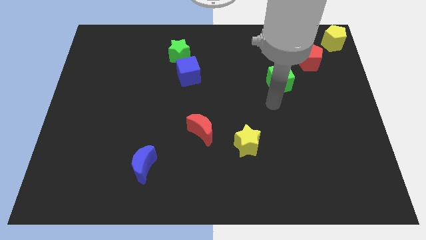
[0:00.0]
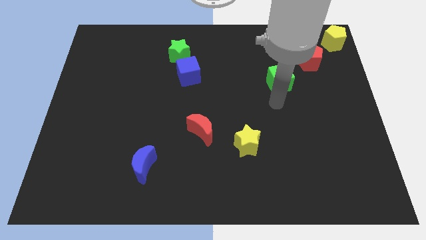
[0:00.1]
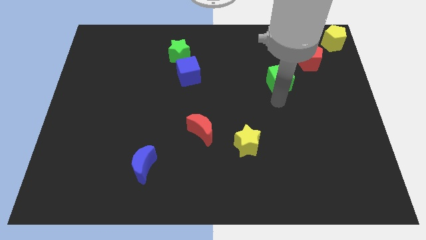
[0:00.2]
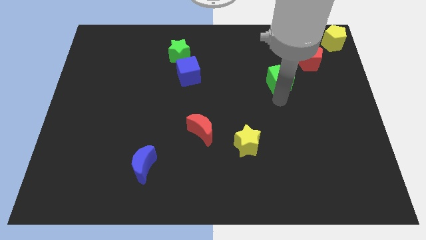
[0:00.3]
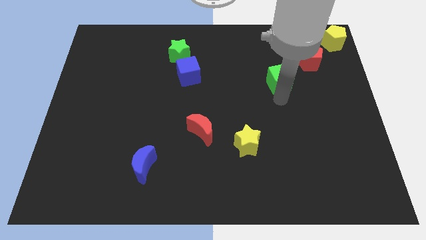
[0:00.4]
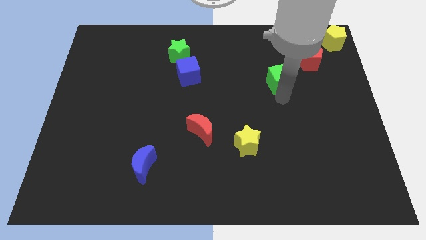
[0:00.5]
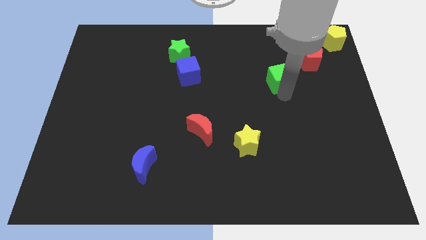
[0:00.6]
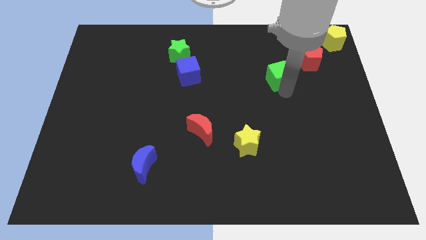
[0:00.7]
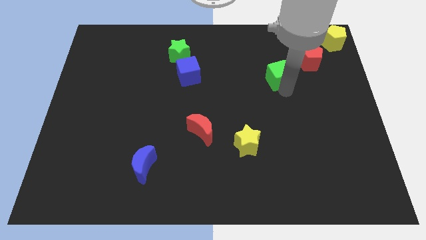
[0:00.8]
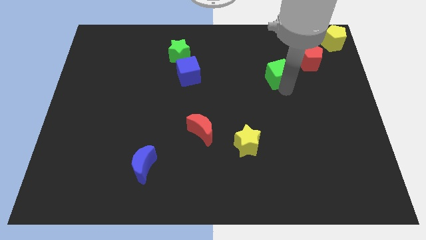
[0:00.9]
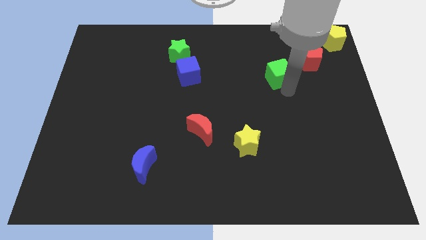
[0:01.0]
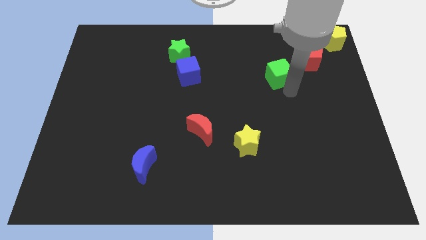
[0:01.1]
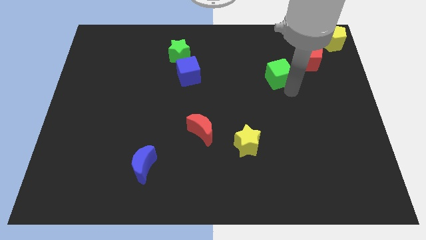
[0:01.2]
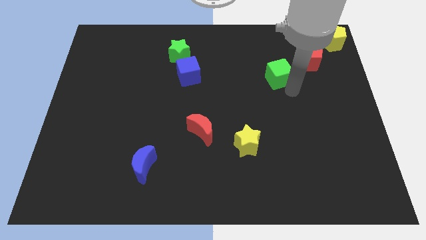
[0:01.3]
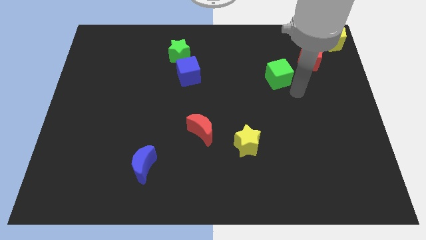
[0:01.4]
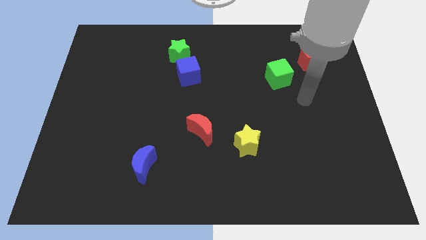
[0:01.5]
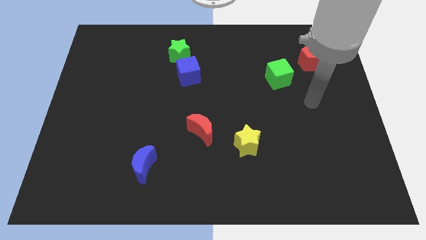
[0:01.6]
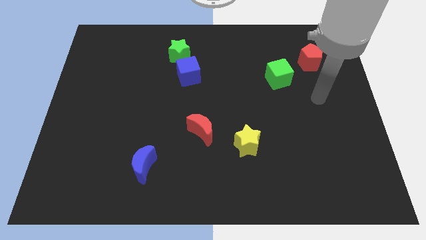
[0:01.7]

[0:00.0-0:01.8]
push the green cube diagonally below the red pentagon

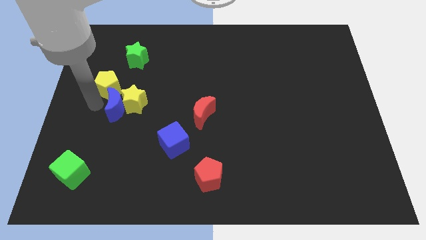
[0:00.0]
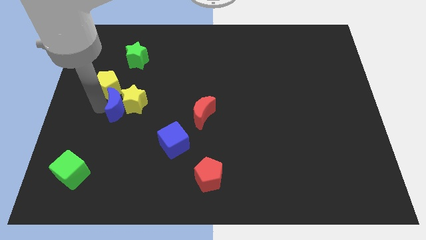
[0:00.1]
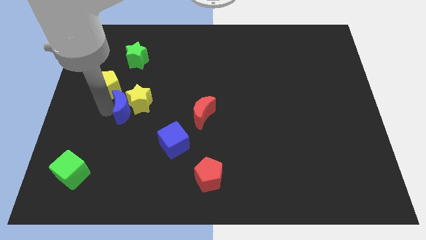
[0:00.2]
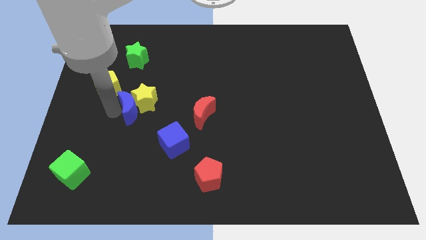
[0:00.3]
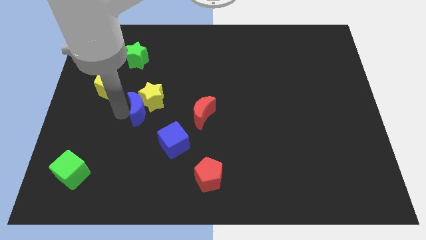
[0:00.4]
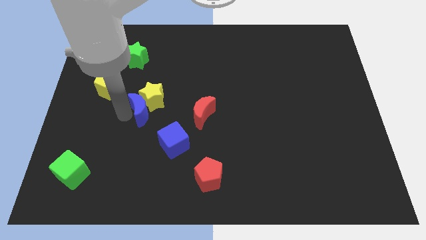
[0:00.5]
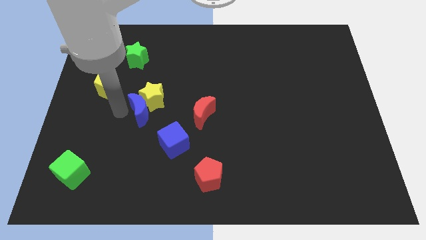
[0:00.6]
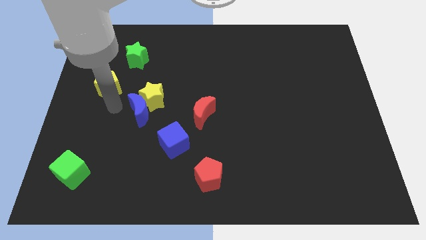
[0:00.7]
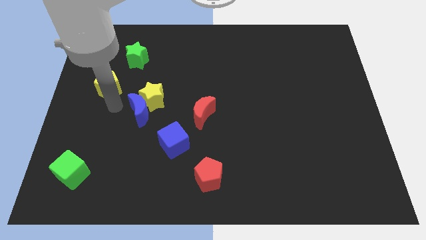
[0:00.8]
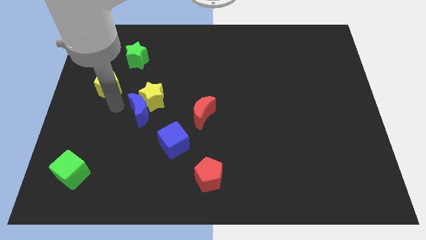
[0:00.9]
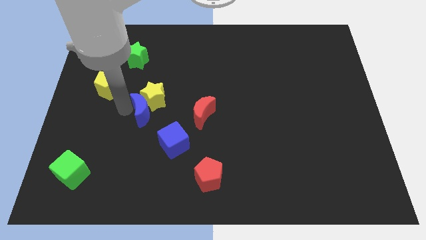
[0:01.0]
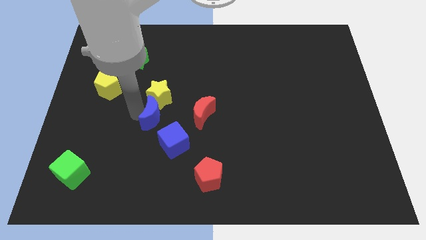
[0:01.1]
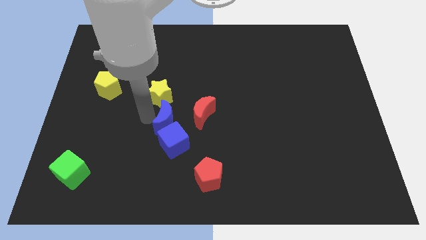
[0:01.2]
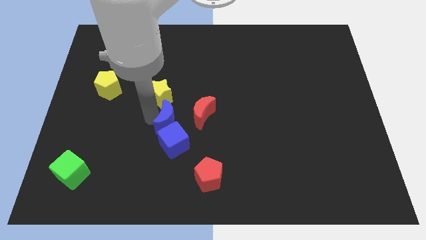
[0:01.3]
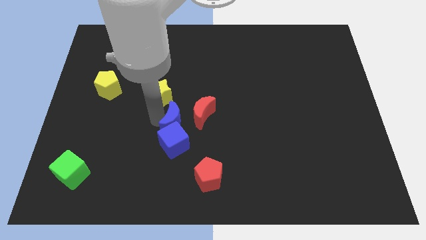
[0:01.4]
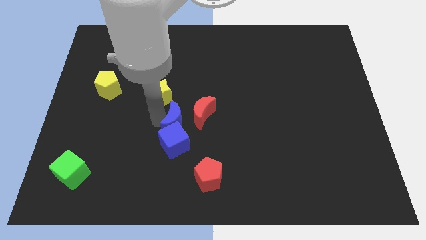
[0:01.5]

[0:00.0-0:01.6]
put the blue moon into the blue cube

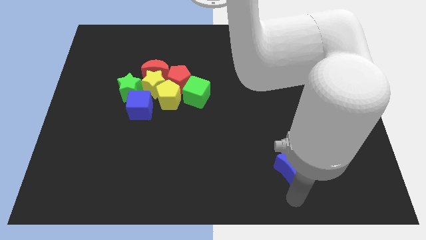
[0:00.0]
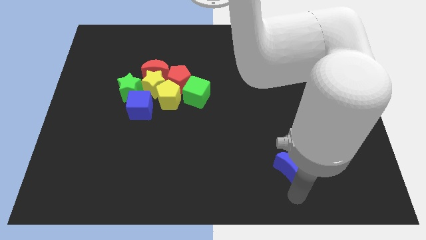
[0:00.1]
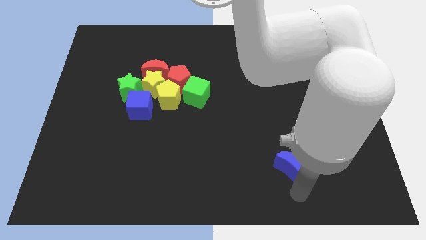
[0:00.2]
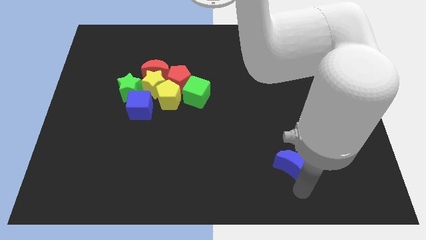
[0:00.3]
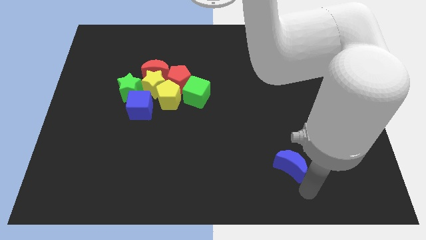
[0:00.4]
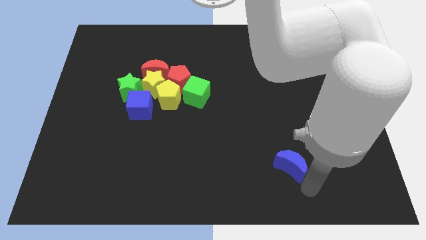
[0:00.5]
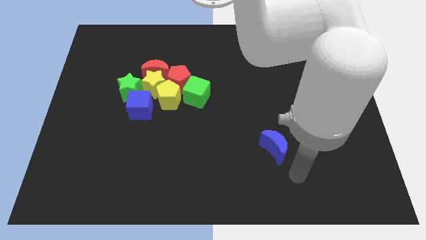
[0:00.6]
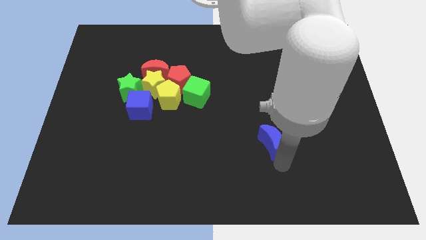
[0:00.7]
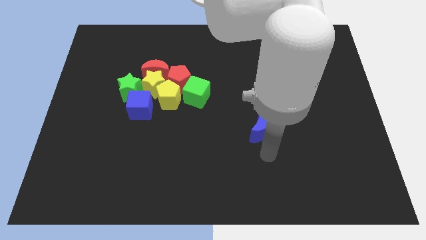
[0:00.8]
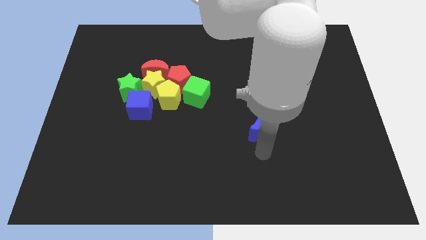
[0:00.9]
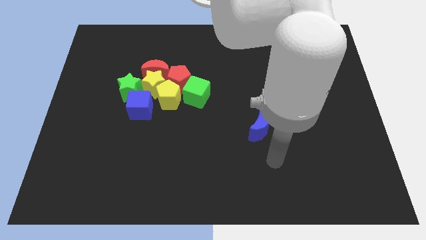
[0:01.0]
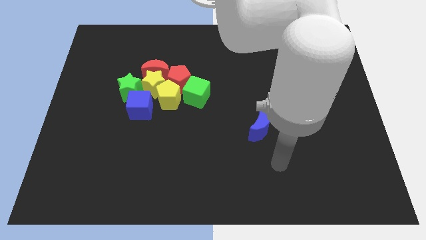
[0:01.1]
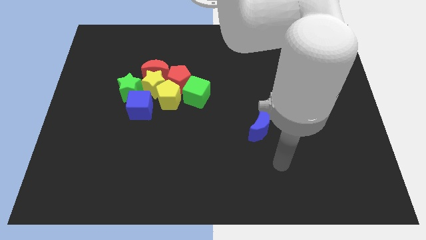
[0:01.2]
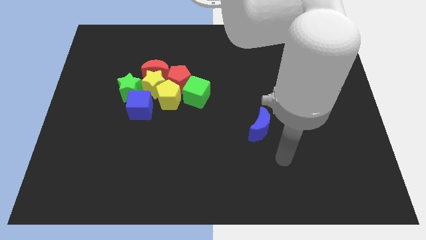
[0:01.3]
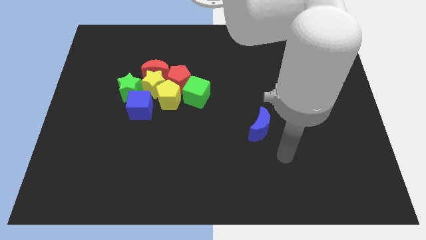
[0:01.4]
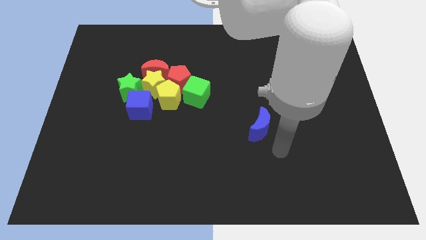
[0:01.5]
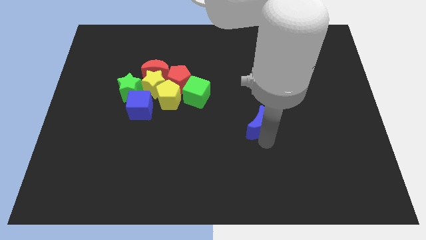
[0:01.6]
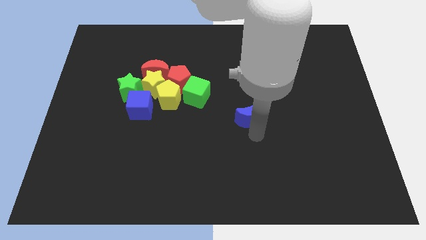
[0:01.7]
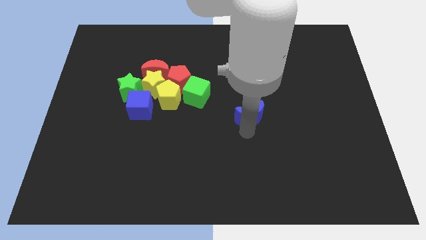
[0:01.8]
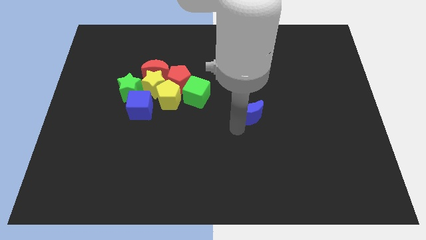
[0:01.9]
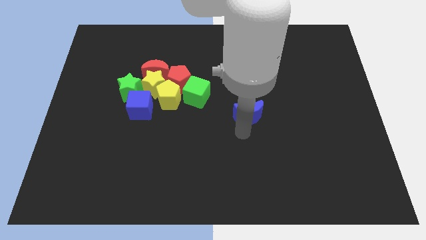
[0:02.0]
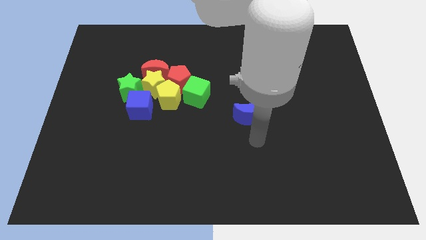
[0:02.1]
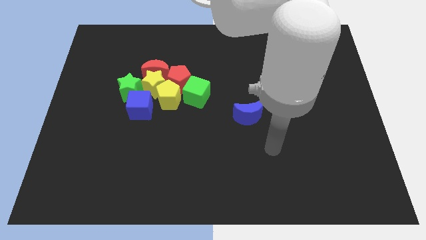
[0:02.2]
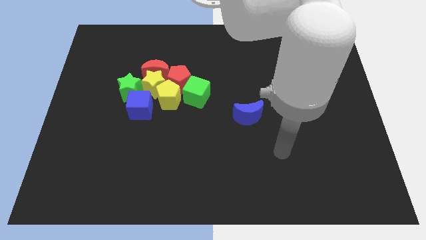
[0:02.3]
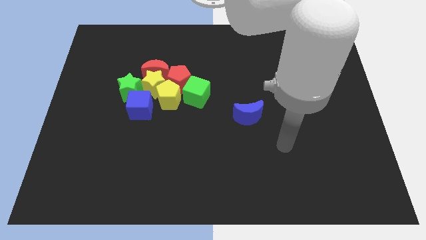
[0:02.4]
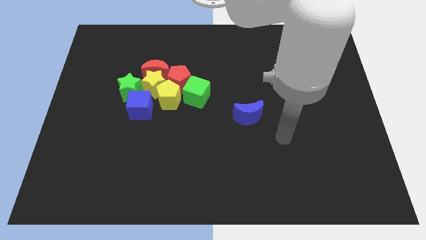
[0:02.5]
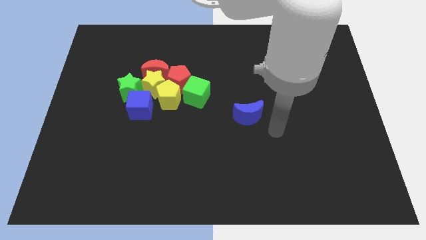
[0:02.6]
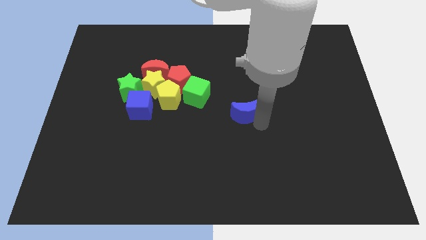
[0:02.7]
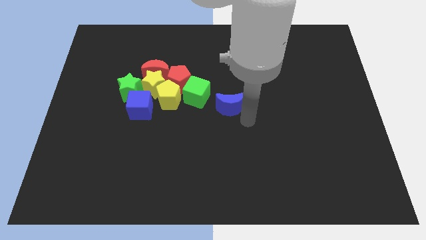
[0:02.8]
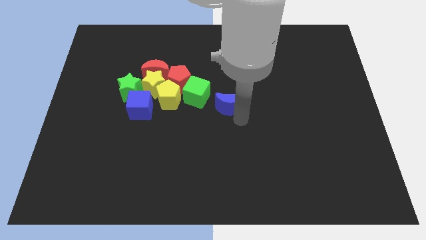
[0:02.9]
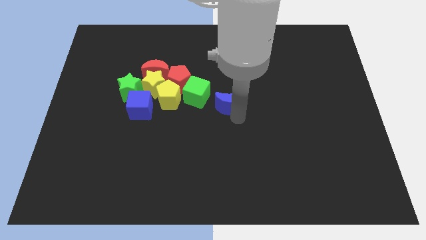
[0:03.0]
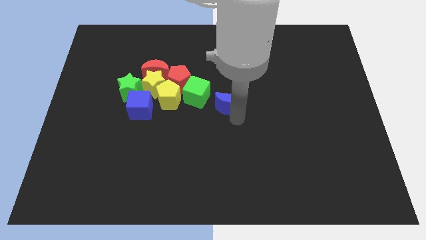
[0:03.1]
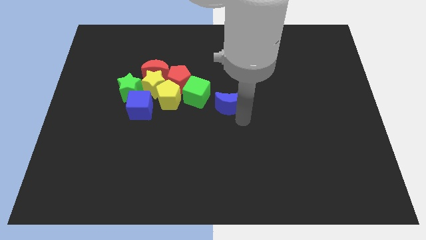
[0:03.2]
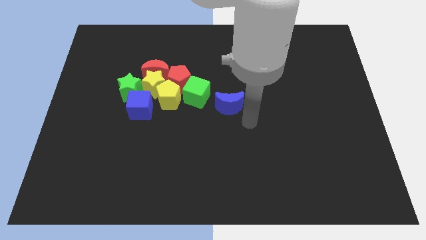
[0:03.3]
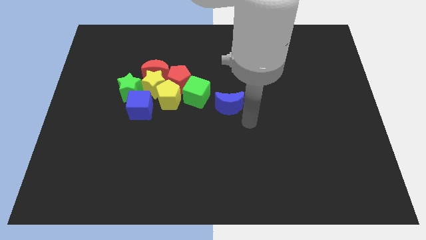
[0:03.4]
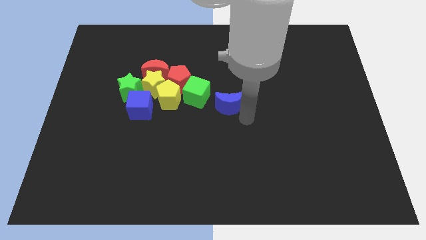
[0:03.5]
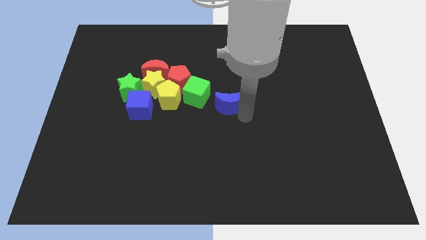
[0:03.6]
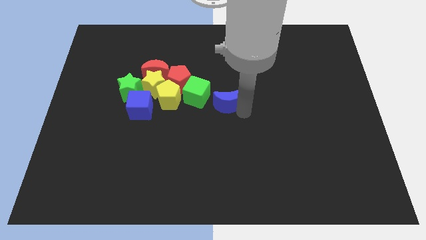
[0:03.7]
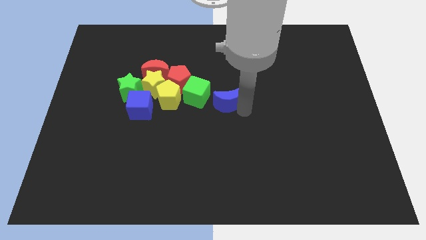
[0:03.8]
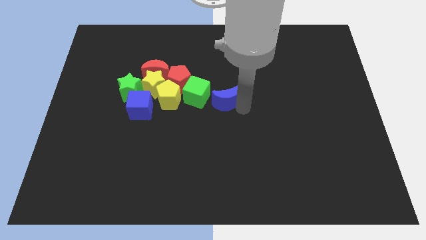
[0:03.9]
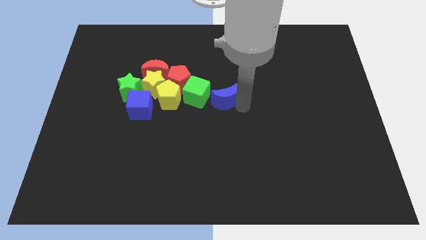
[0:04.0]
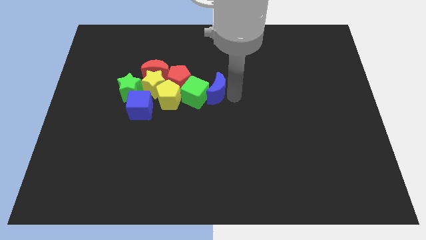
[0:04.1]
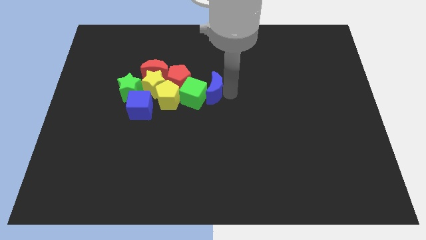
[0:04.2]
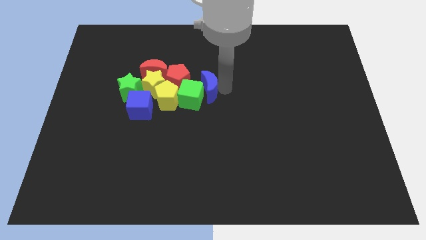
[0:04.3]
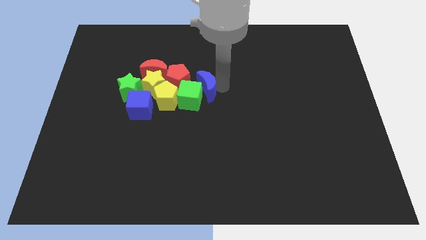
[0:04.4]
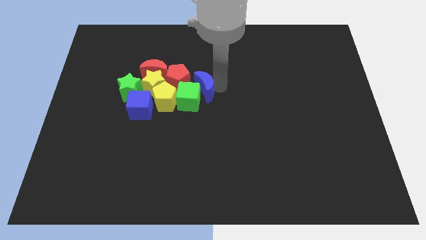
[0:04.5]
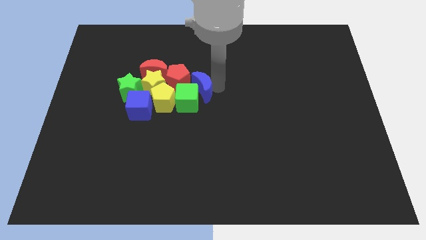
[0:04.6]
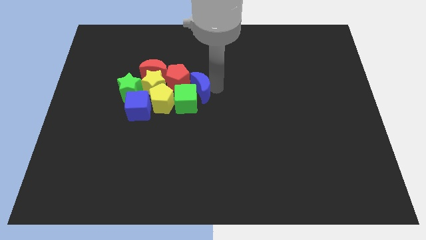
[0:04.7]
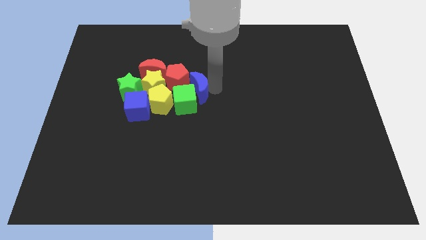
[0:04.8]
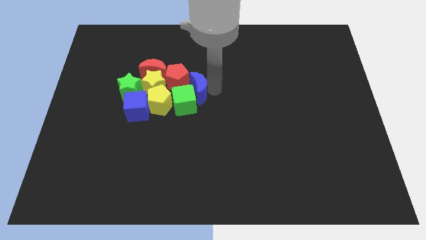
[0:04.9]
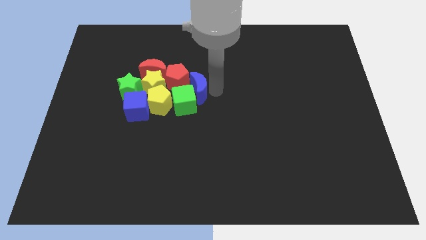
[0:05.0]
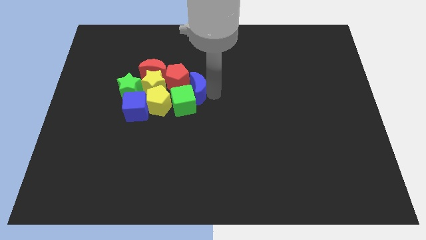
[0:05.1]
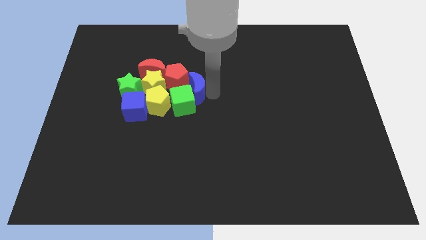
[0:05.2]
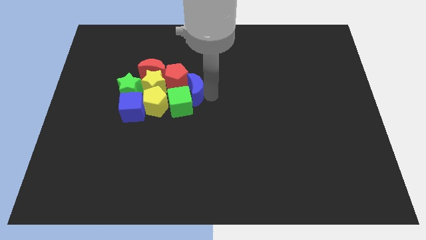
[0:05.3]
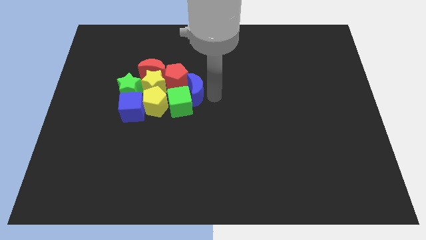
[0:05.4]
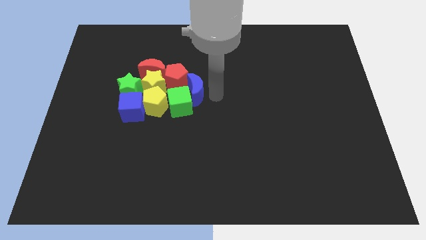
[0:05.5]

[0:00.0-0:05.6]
move the blue moon into the group lo blocks
